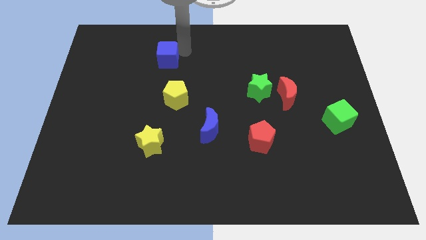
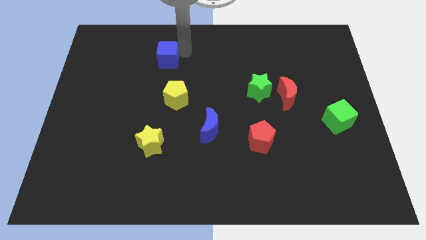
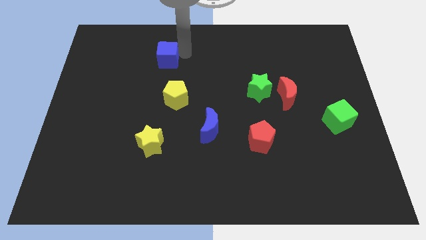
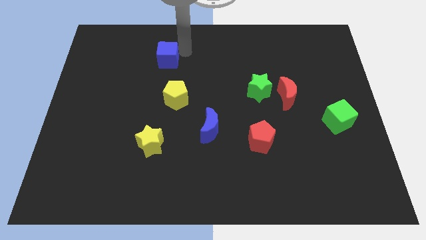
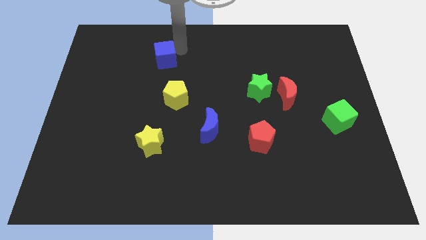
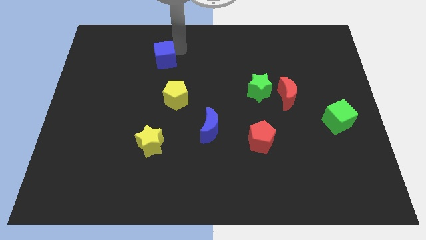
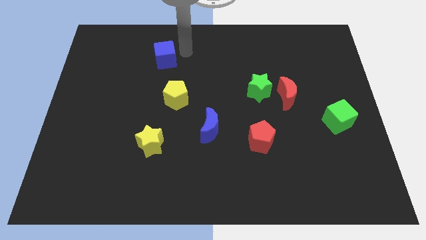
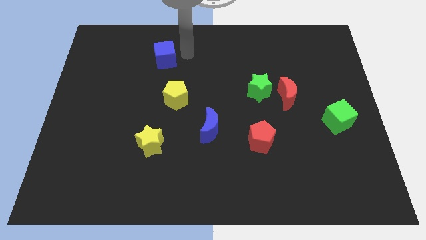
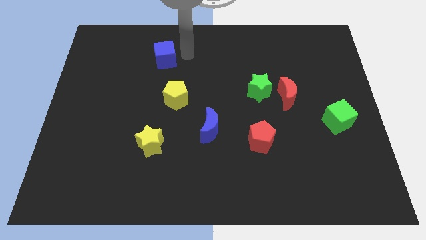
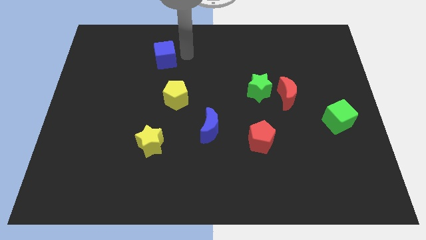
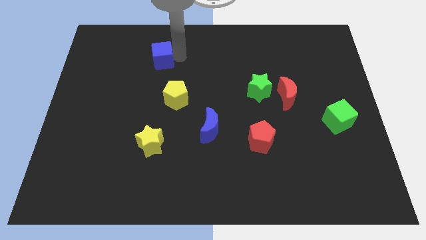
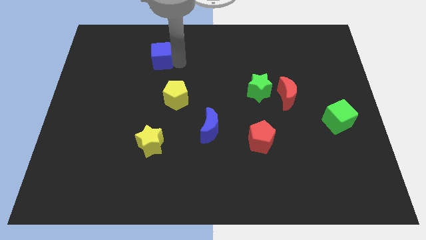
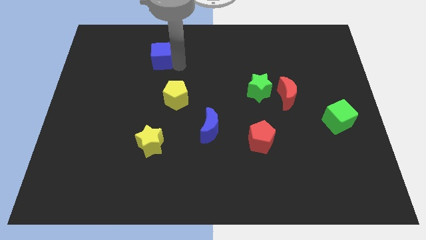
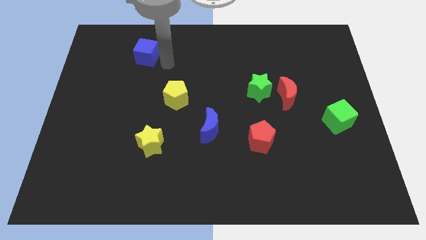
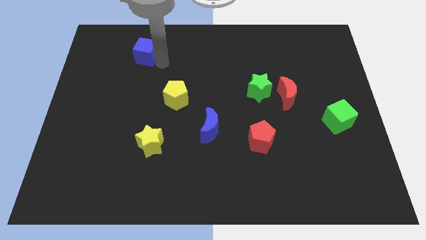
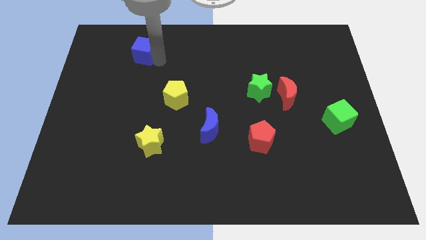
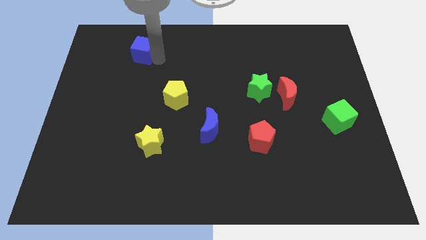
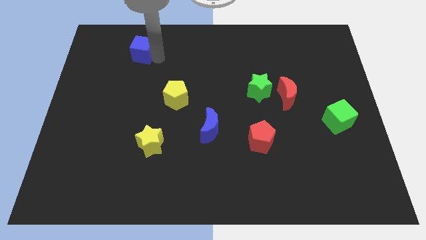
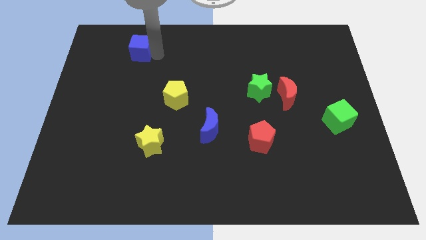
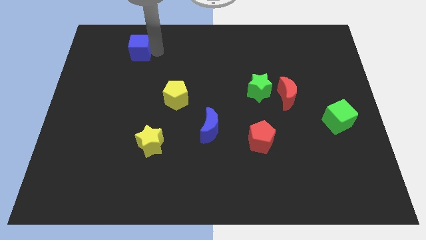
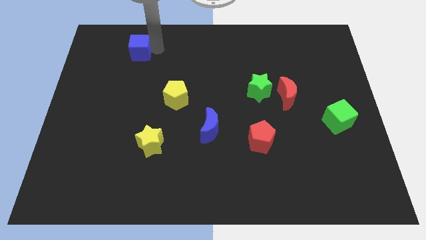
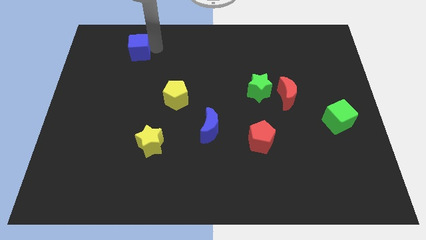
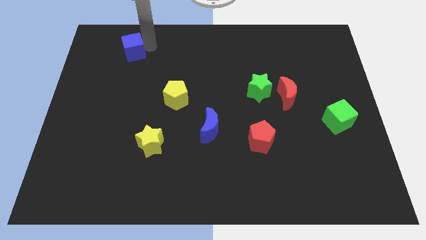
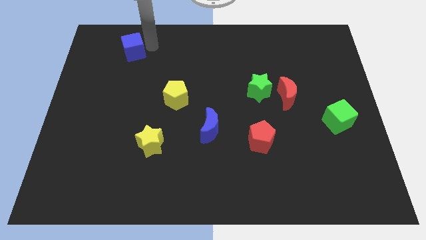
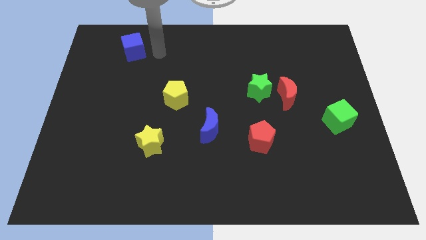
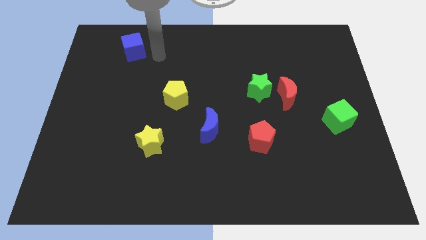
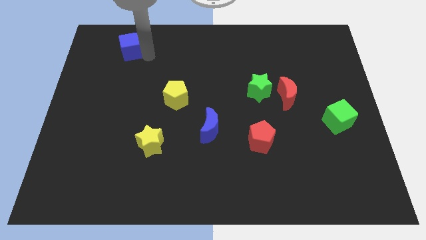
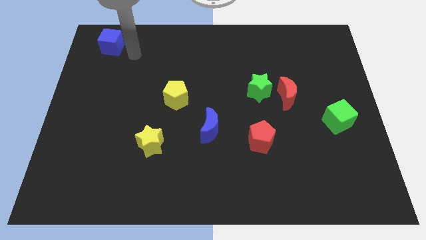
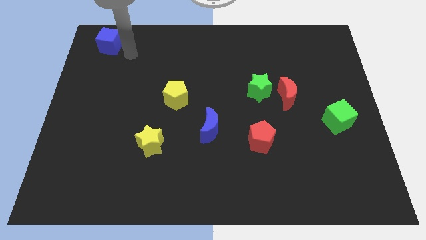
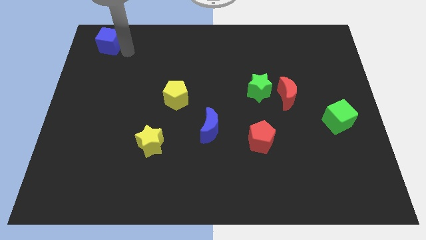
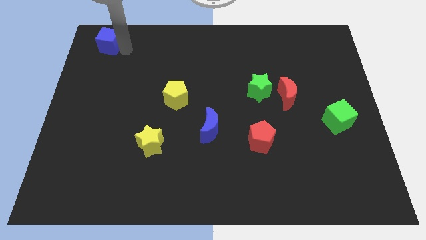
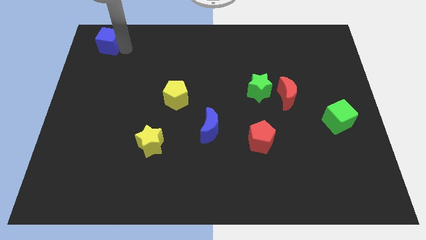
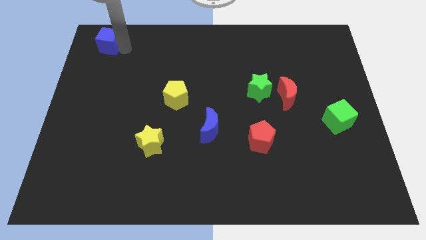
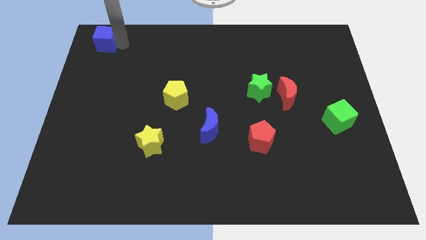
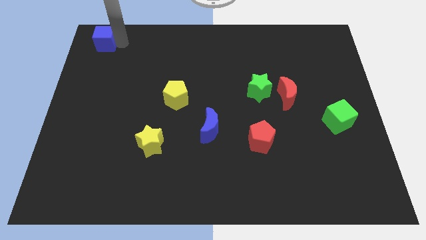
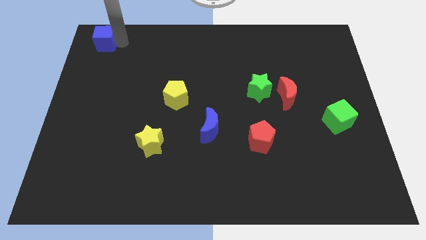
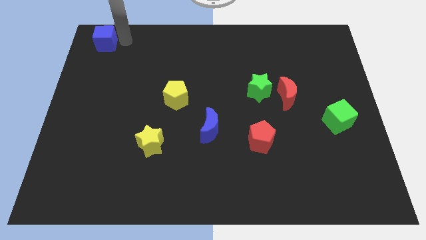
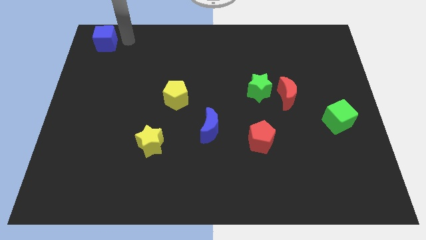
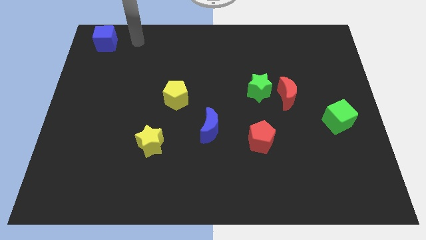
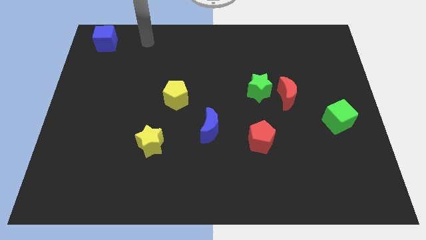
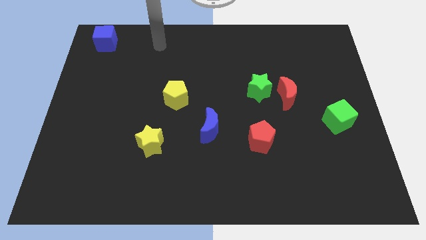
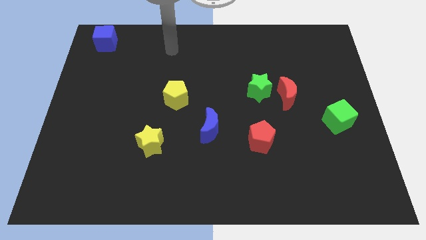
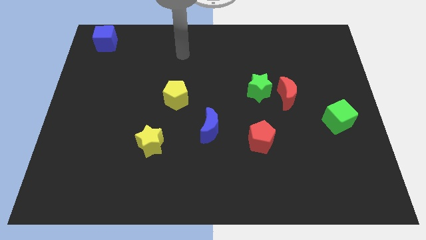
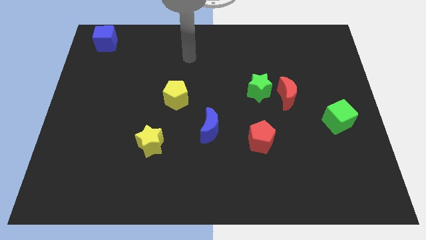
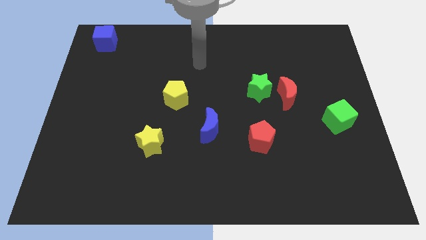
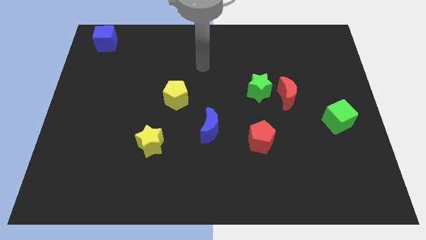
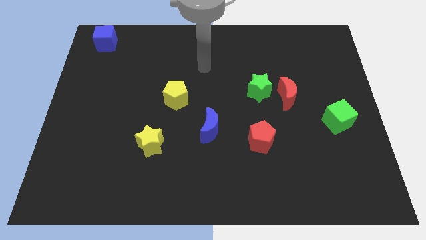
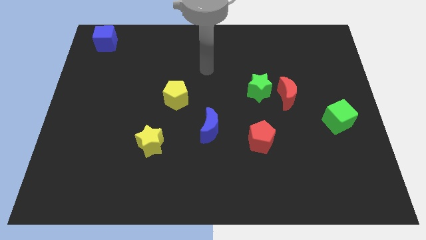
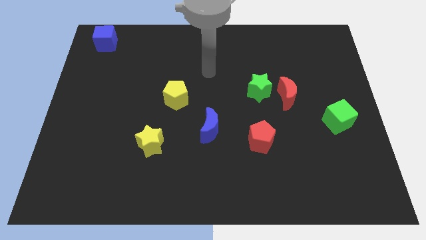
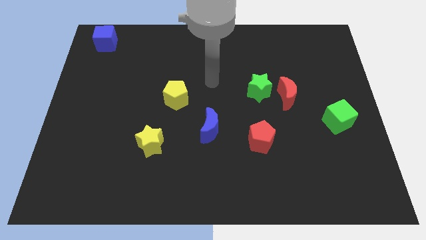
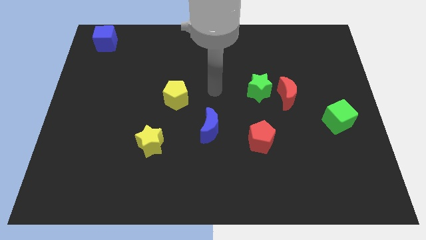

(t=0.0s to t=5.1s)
move the blue cube to the top left corner

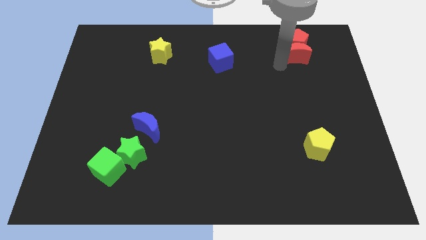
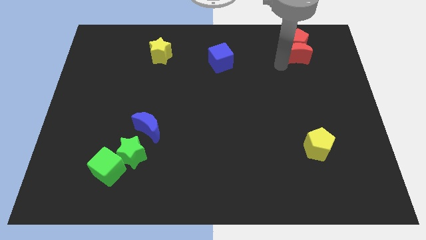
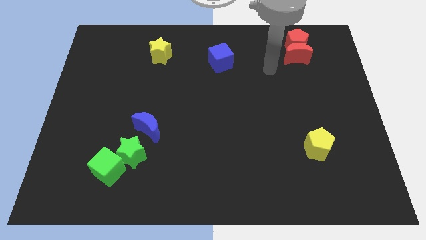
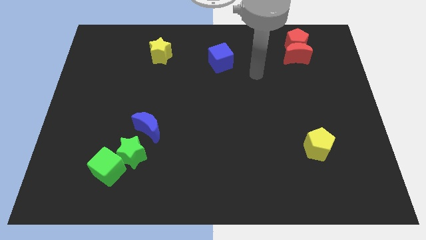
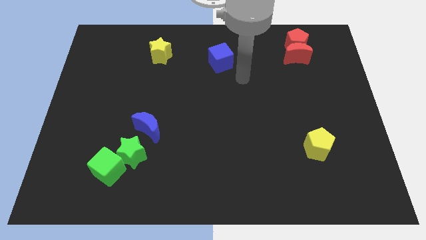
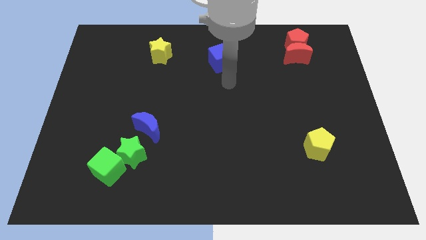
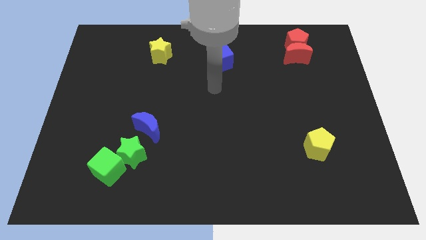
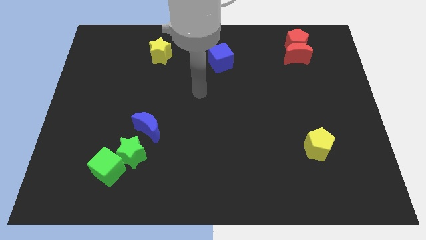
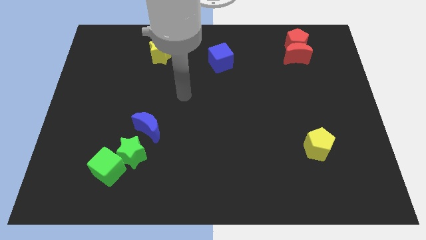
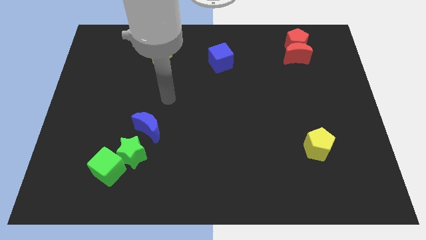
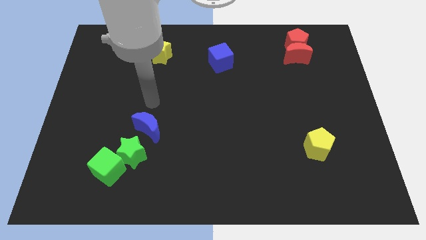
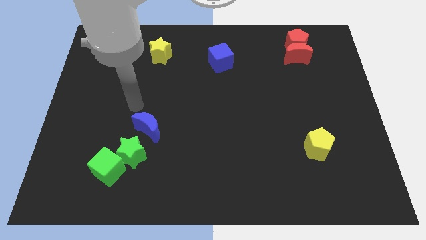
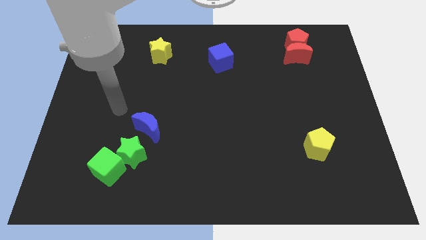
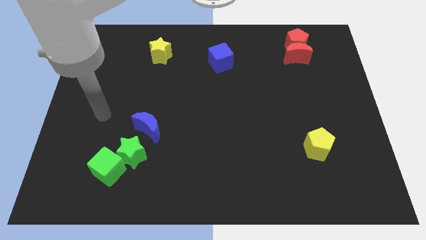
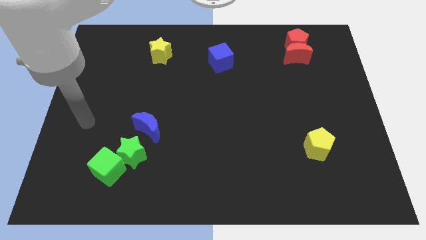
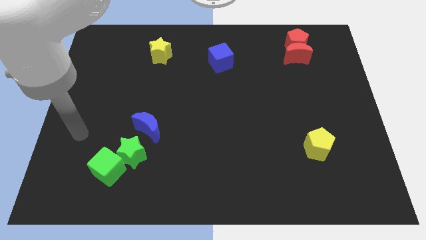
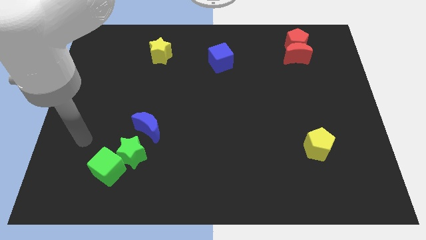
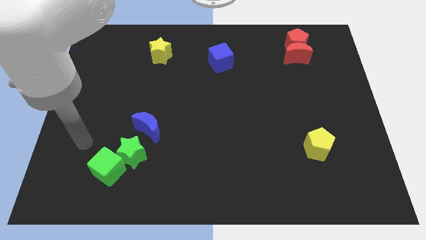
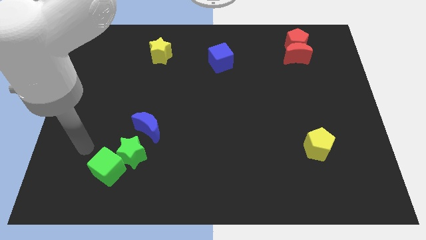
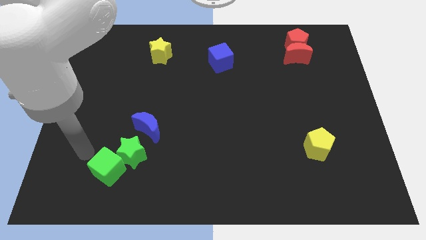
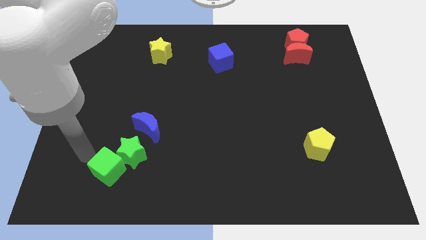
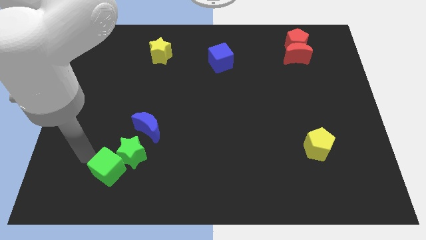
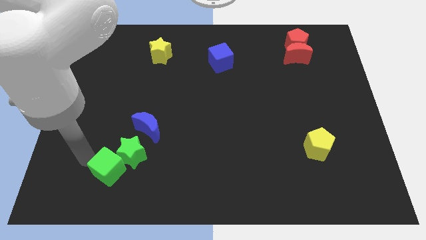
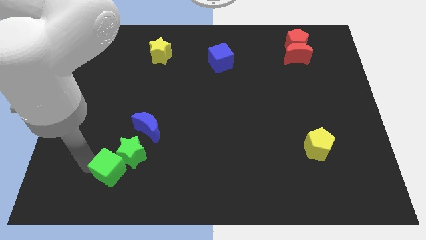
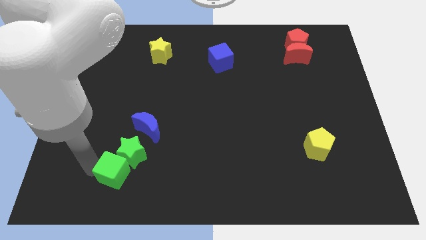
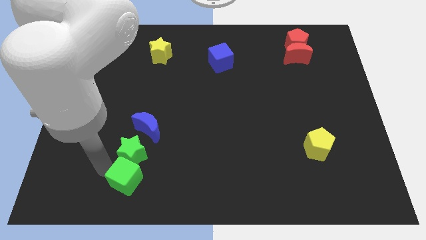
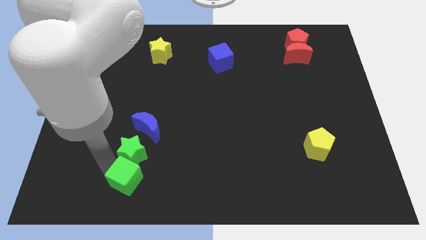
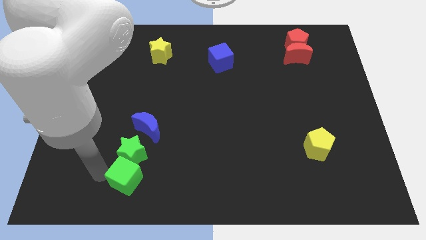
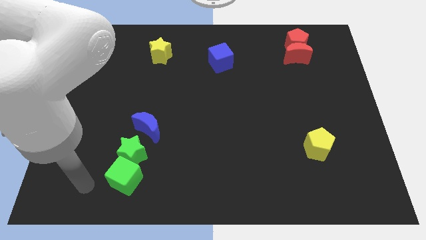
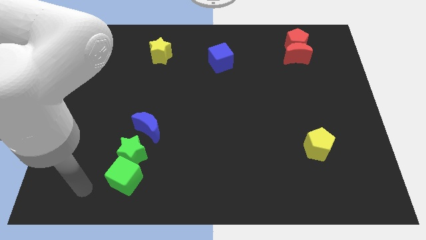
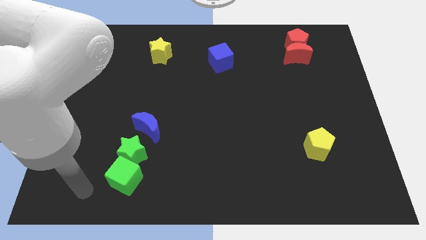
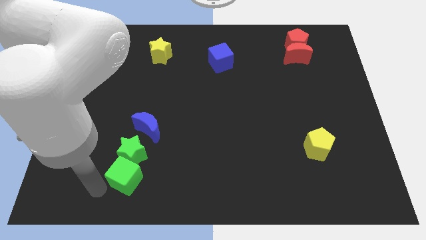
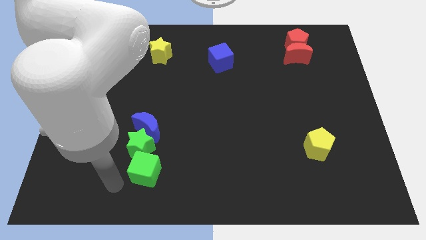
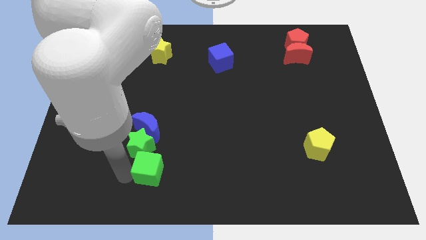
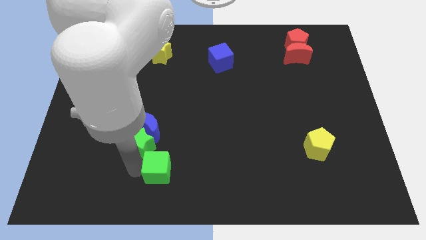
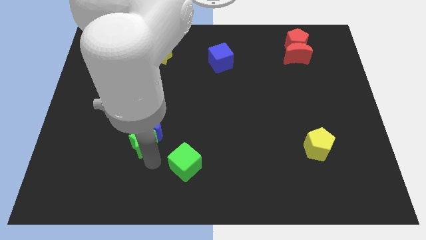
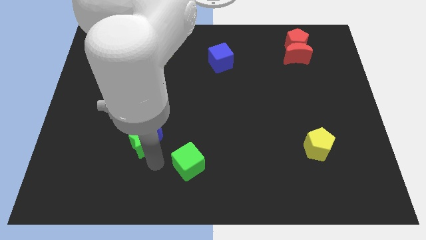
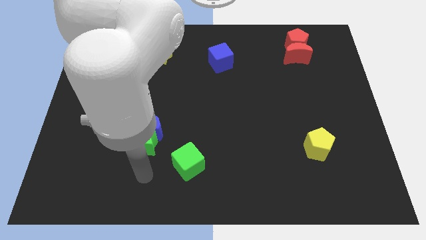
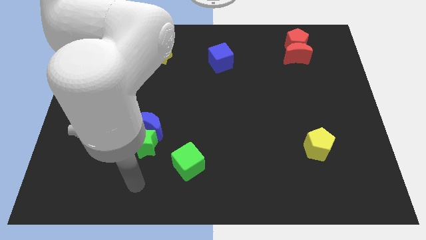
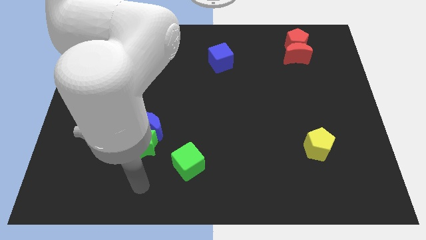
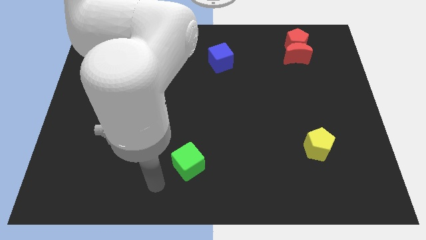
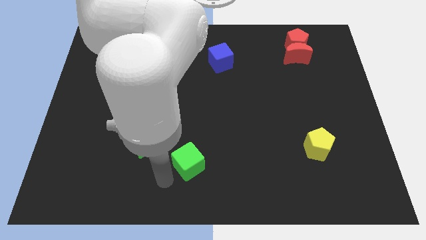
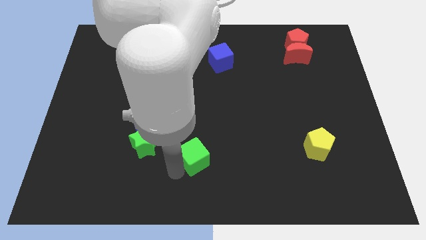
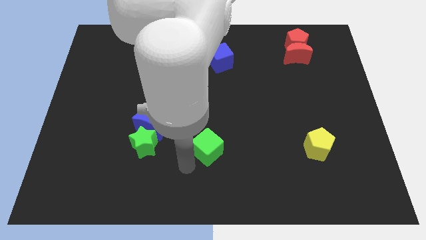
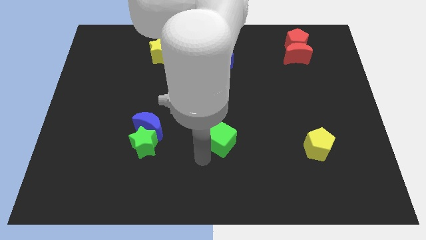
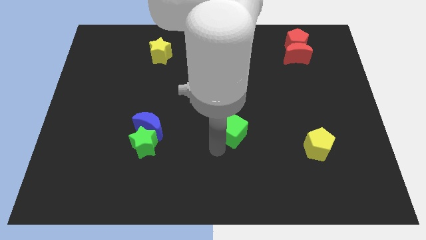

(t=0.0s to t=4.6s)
move the green cube in between the blue crescent and yellow pentagon
